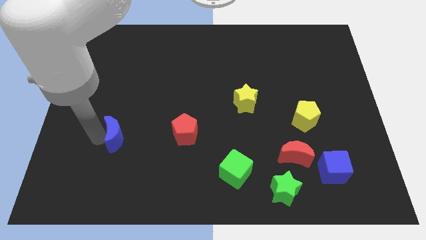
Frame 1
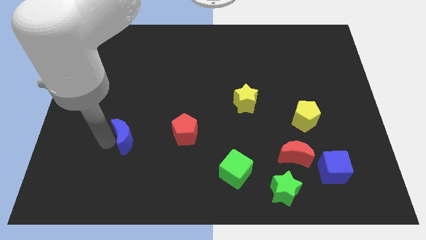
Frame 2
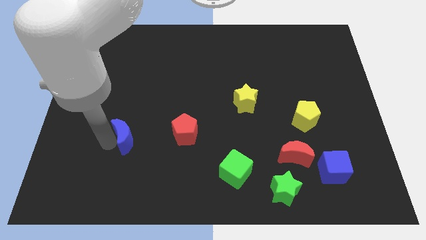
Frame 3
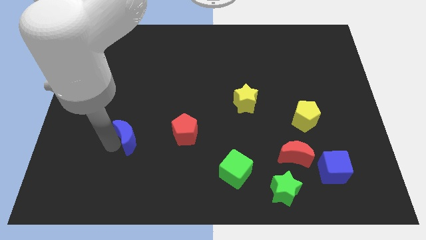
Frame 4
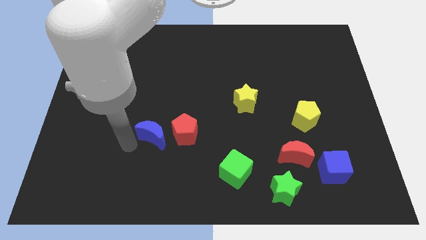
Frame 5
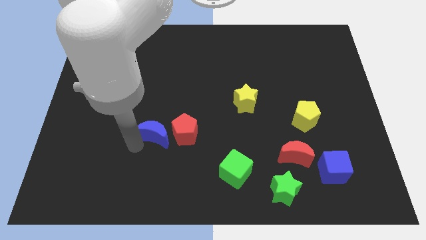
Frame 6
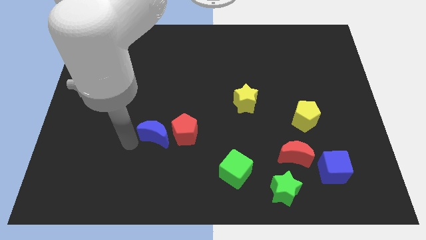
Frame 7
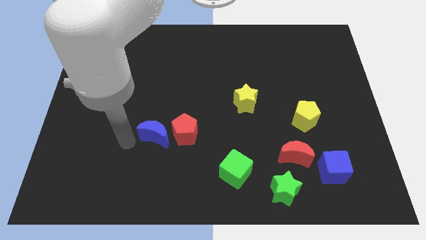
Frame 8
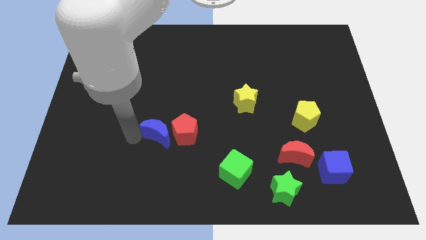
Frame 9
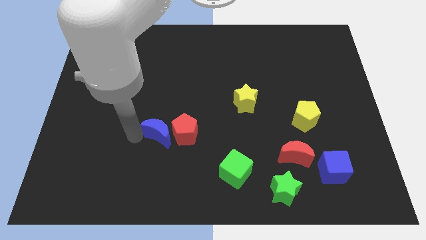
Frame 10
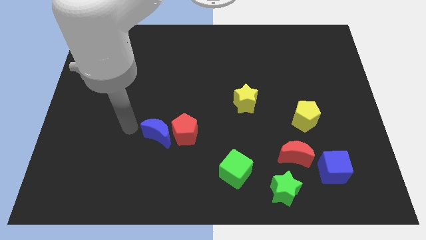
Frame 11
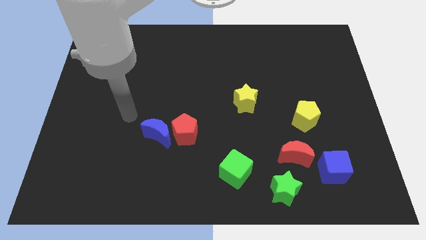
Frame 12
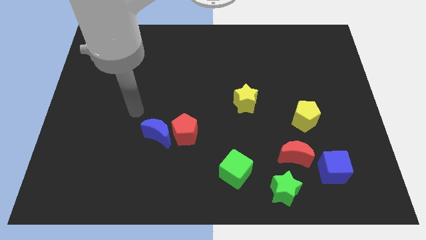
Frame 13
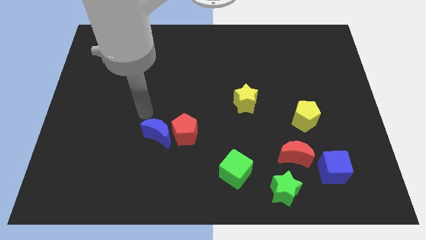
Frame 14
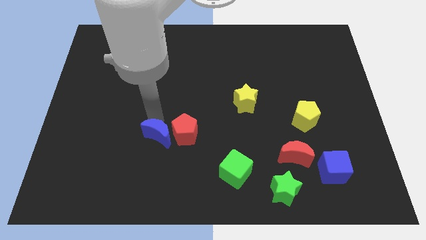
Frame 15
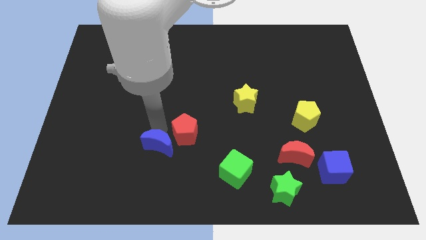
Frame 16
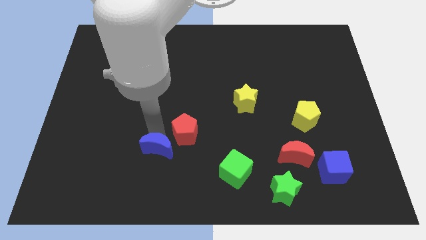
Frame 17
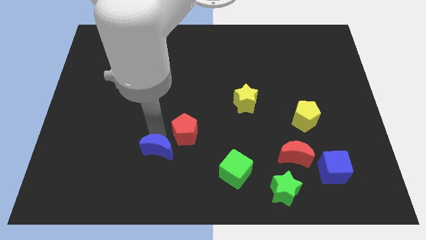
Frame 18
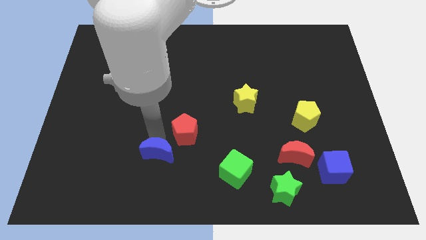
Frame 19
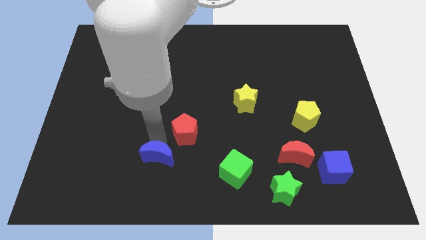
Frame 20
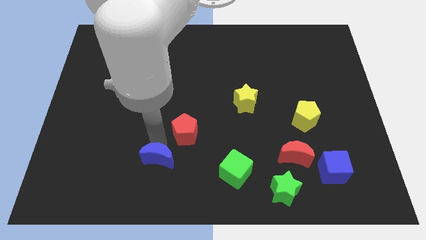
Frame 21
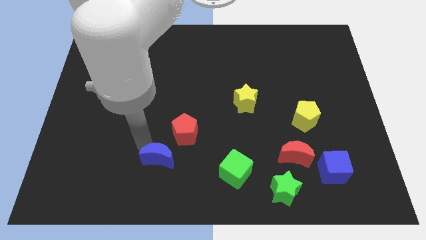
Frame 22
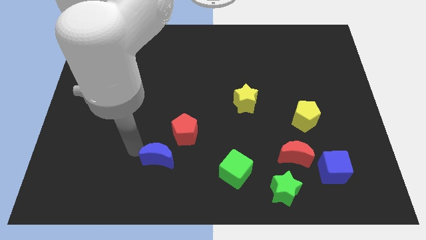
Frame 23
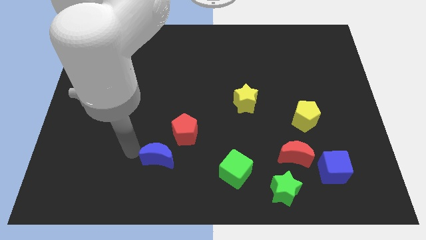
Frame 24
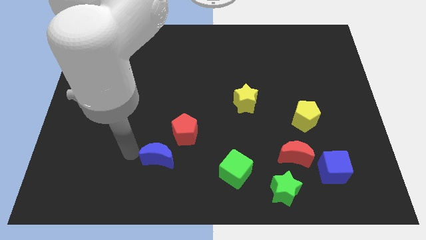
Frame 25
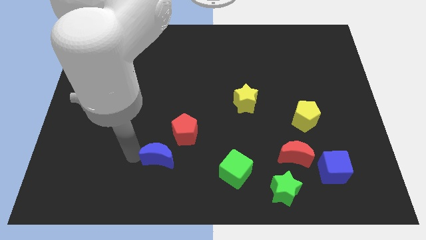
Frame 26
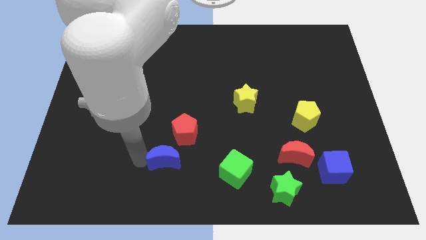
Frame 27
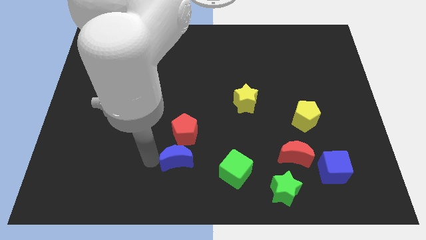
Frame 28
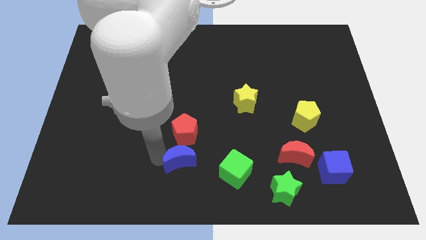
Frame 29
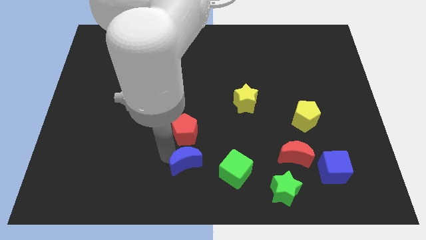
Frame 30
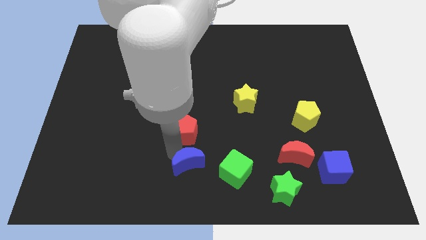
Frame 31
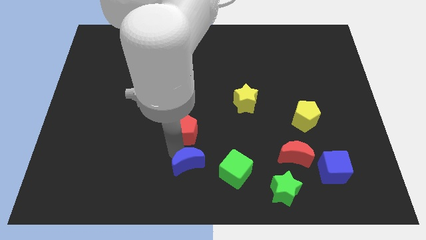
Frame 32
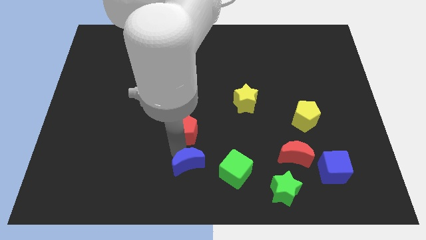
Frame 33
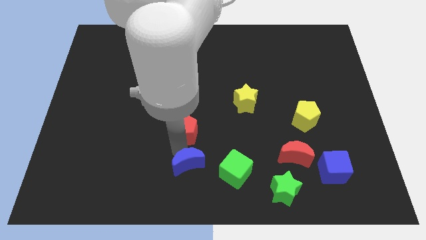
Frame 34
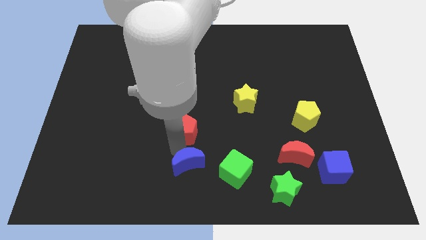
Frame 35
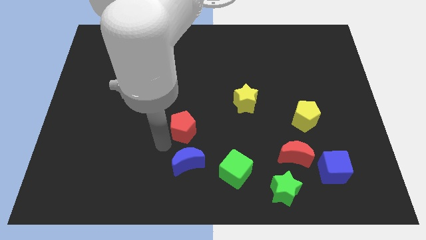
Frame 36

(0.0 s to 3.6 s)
place the blue crescent to the bottom of the red pentagon

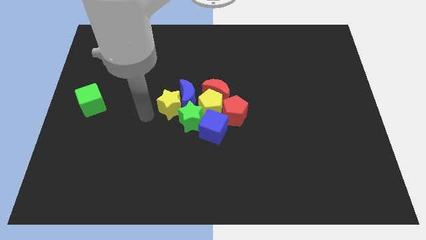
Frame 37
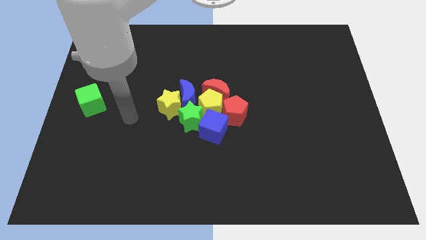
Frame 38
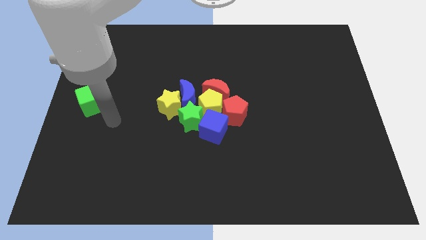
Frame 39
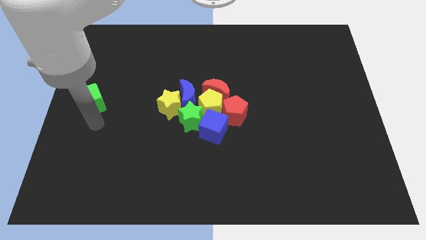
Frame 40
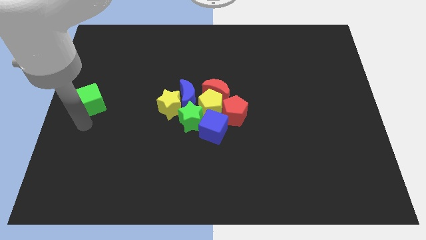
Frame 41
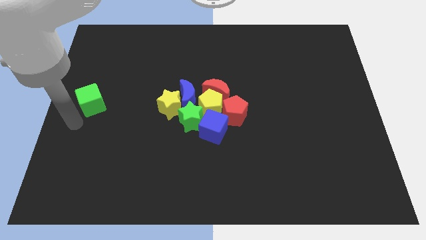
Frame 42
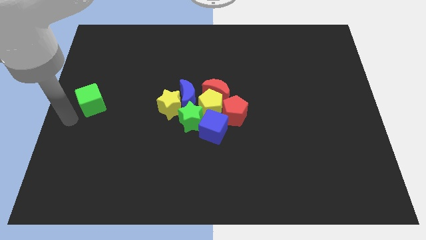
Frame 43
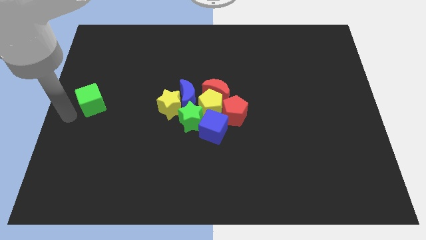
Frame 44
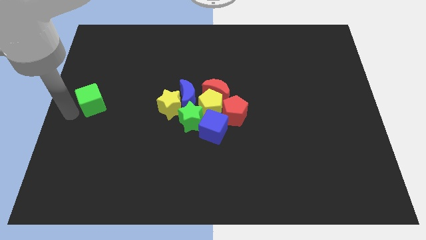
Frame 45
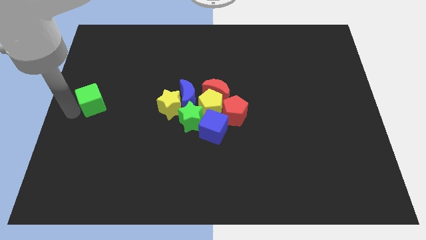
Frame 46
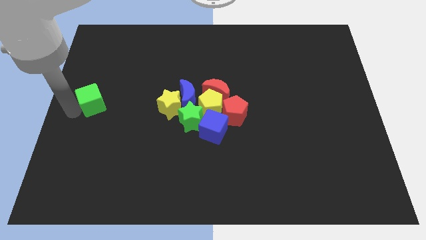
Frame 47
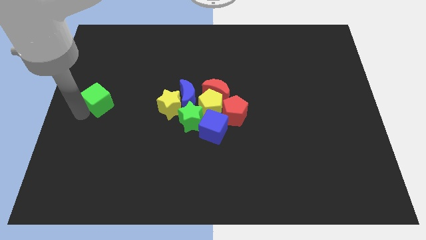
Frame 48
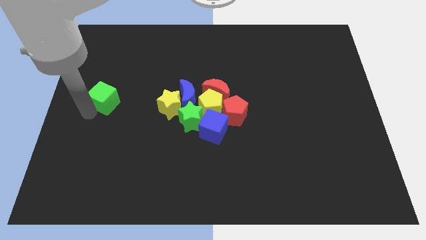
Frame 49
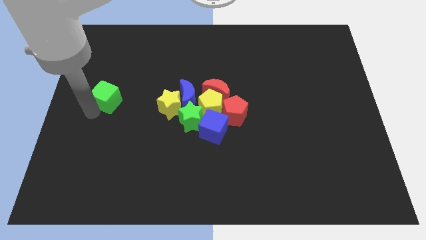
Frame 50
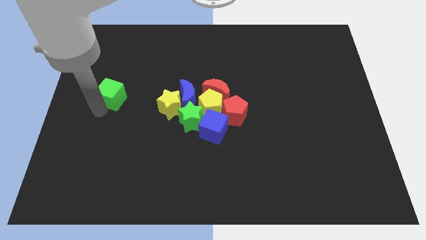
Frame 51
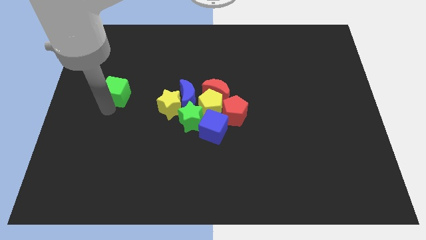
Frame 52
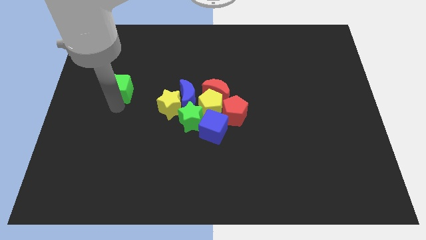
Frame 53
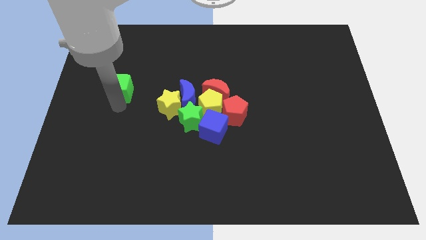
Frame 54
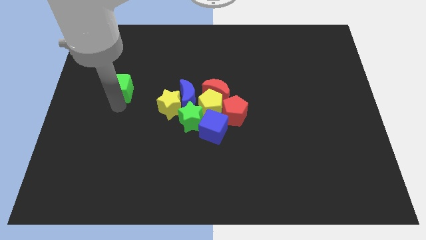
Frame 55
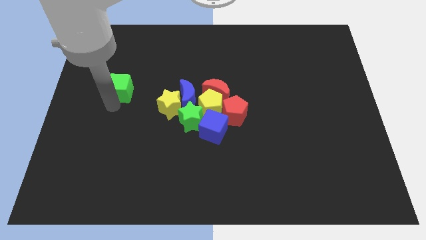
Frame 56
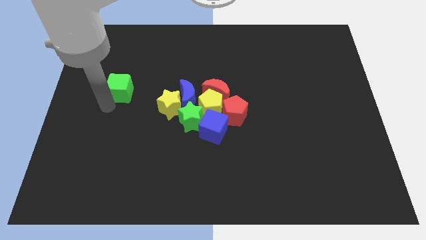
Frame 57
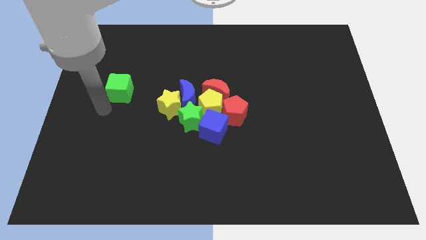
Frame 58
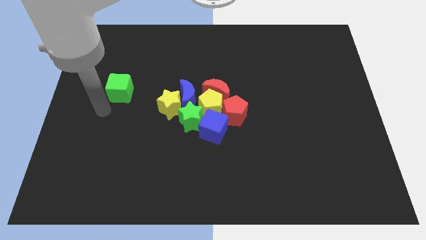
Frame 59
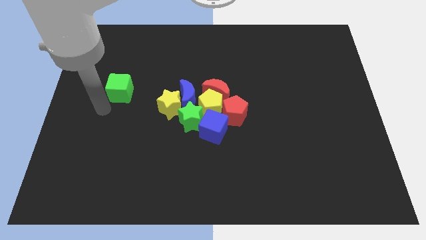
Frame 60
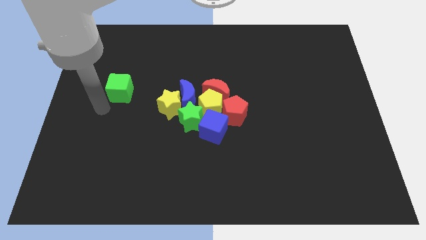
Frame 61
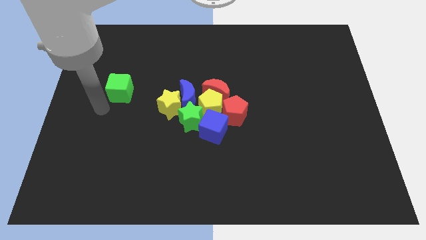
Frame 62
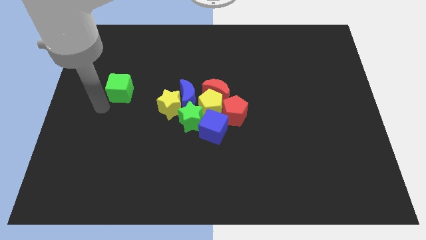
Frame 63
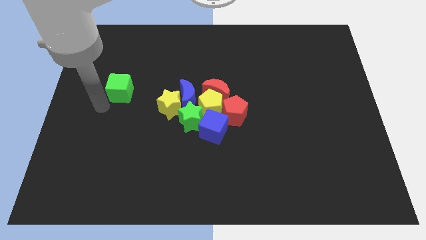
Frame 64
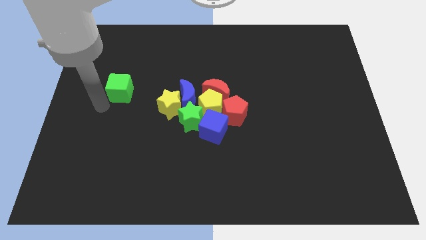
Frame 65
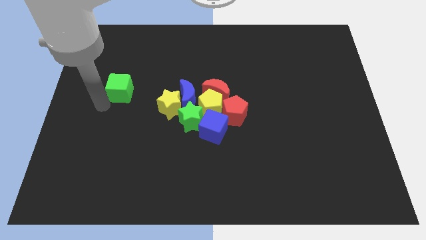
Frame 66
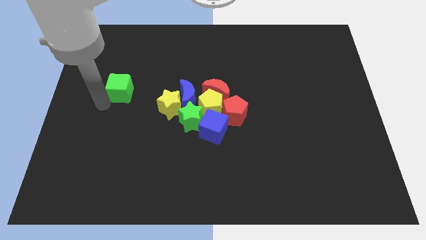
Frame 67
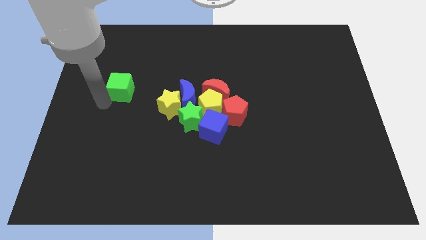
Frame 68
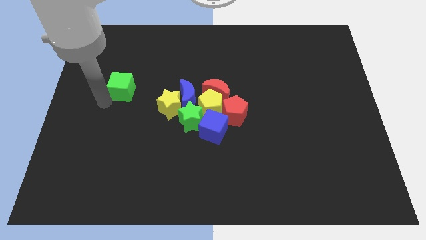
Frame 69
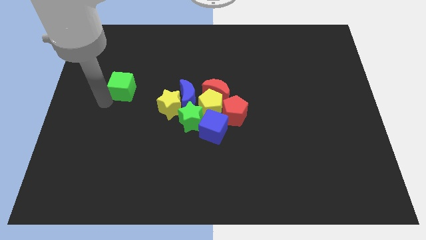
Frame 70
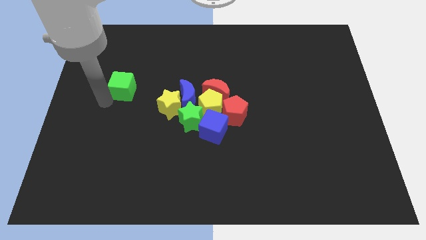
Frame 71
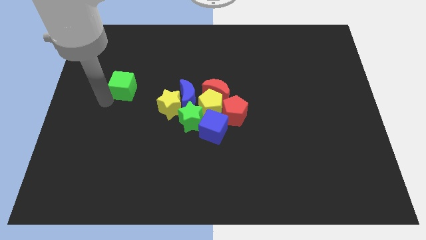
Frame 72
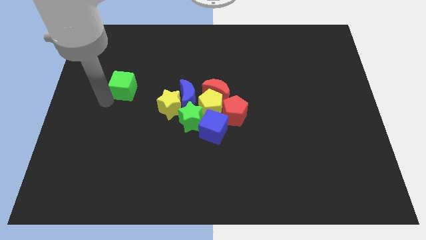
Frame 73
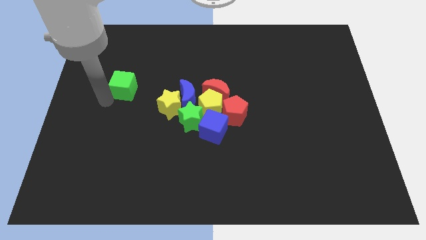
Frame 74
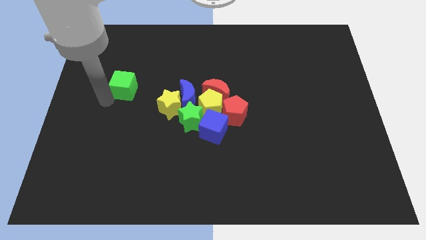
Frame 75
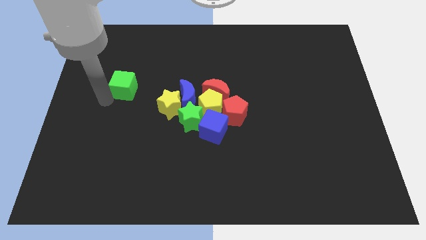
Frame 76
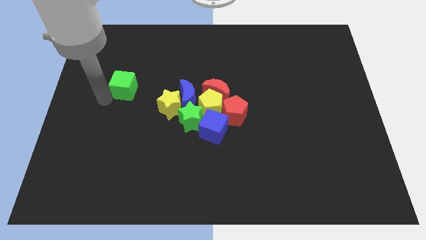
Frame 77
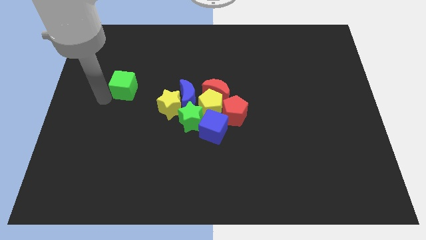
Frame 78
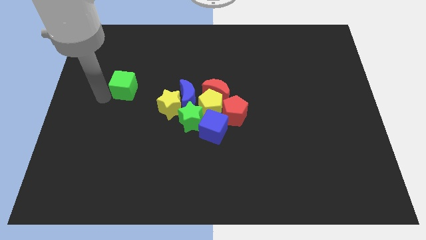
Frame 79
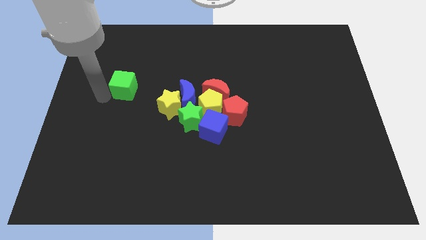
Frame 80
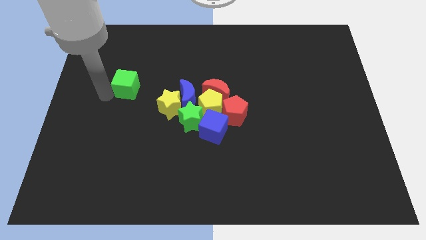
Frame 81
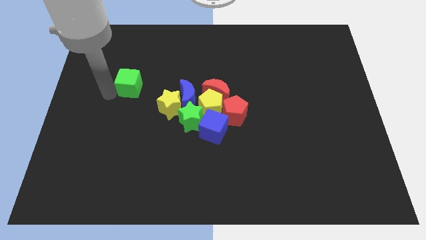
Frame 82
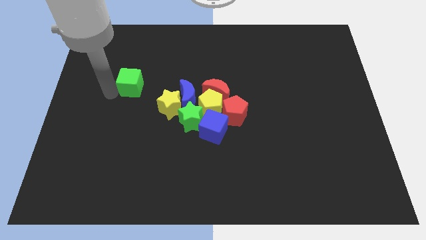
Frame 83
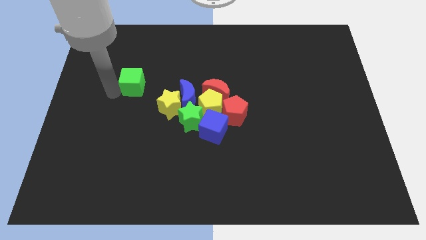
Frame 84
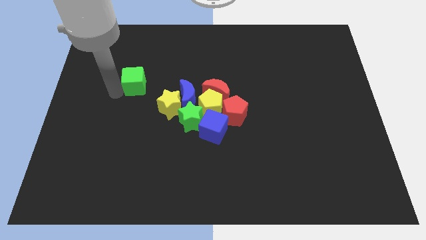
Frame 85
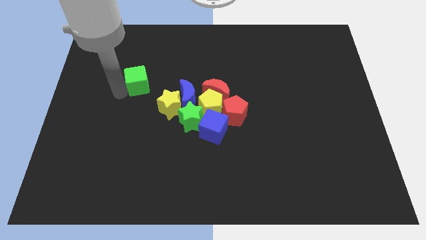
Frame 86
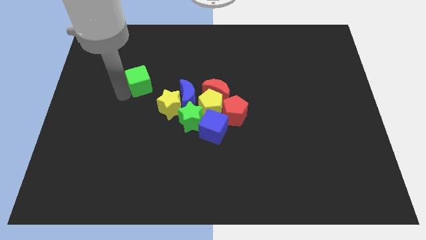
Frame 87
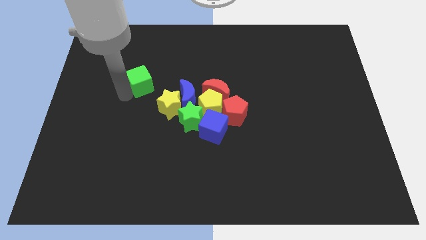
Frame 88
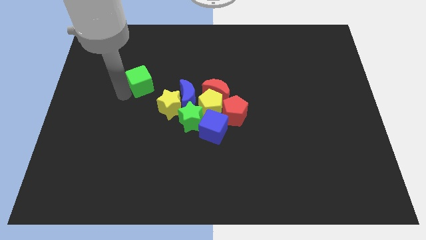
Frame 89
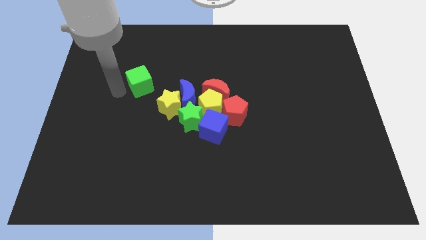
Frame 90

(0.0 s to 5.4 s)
drag the green cube diagonally on the top left side of the yellow star
